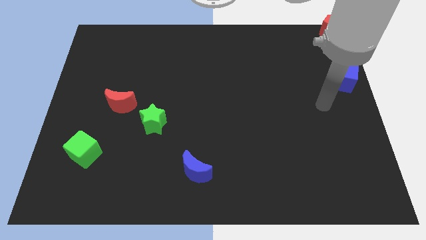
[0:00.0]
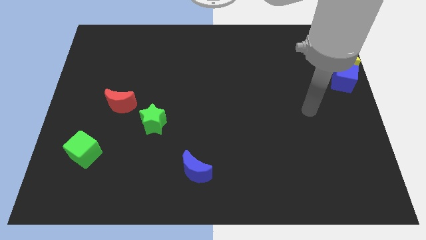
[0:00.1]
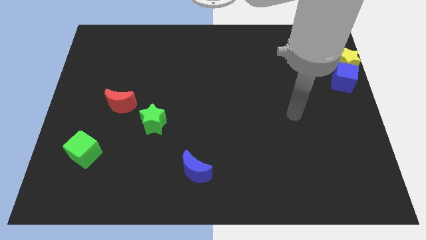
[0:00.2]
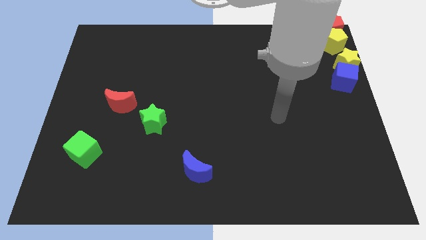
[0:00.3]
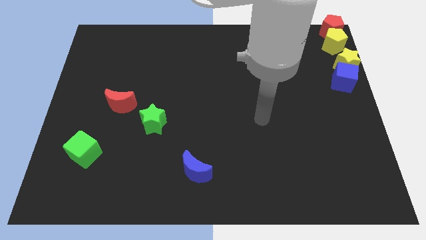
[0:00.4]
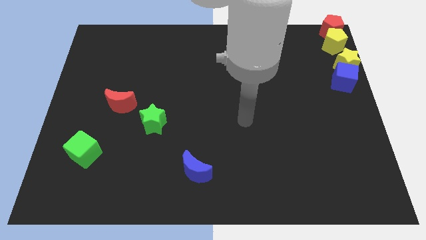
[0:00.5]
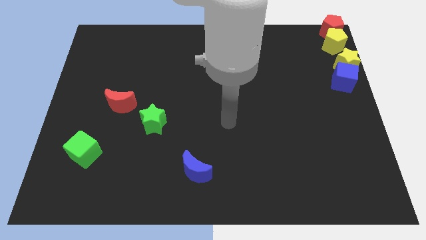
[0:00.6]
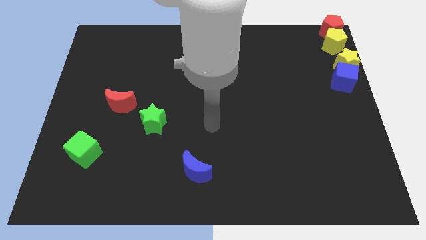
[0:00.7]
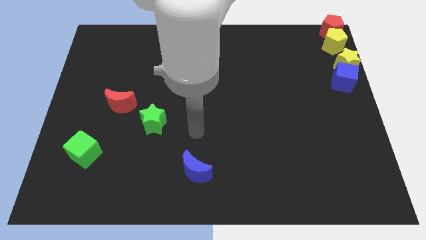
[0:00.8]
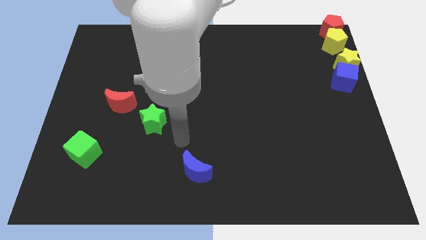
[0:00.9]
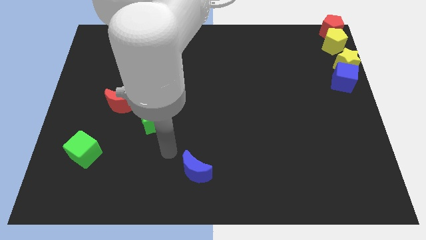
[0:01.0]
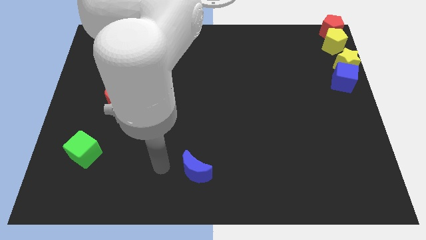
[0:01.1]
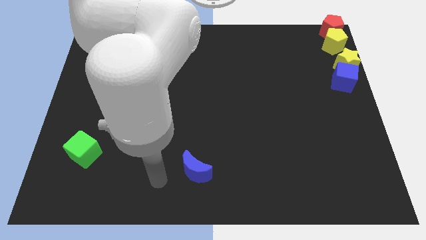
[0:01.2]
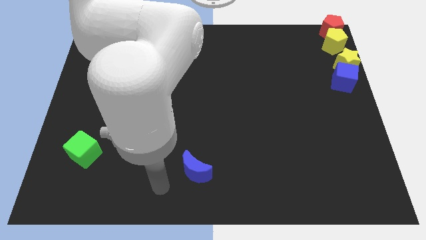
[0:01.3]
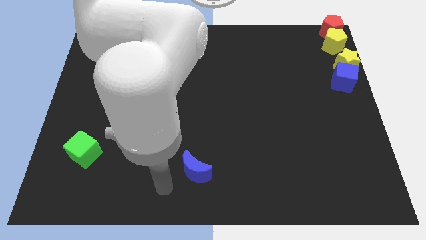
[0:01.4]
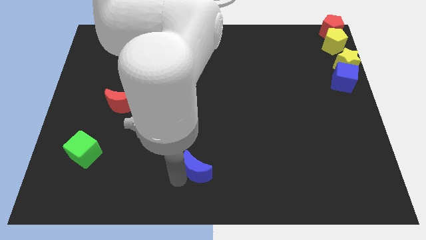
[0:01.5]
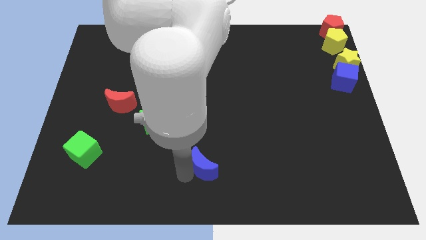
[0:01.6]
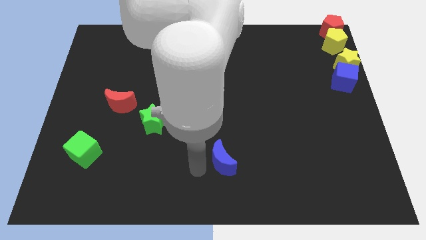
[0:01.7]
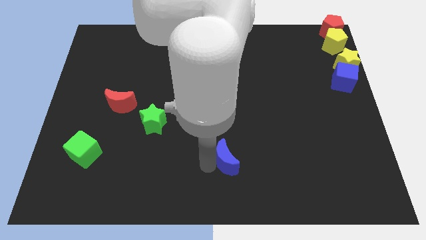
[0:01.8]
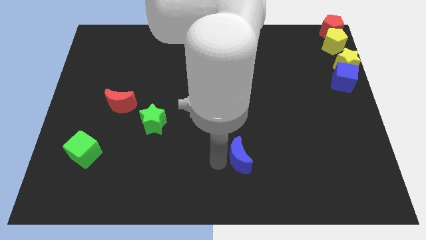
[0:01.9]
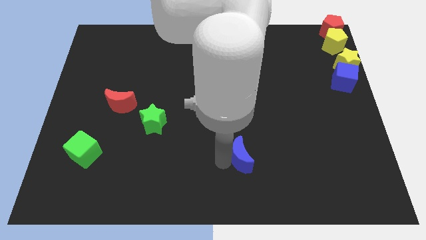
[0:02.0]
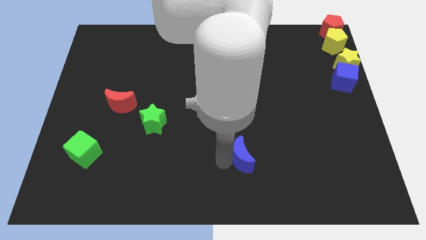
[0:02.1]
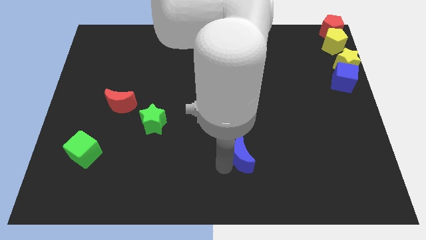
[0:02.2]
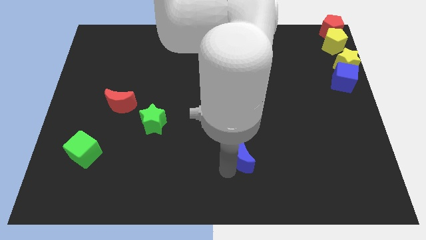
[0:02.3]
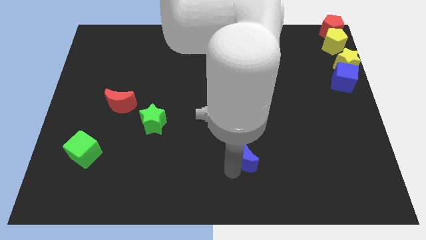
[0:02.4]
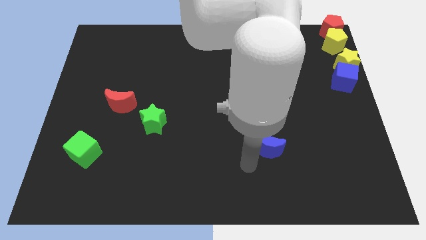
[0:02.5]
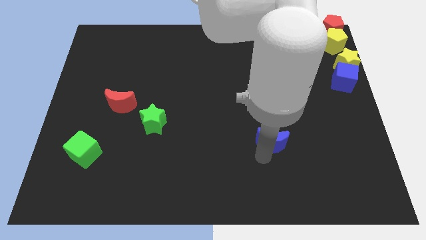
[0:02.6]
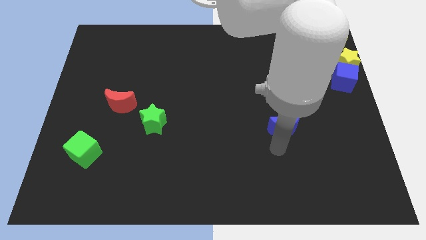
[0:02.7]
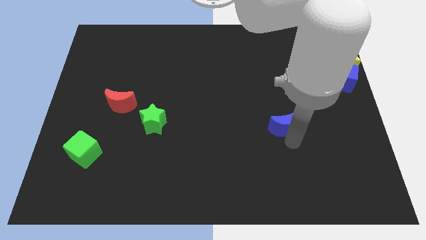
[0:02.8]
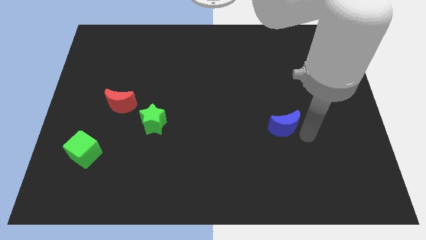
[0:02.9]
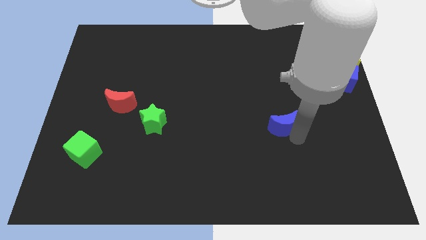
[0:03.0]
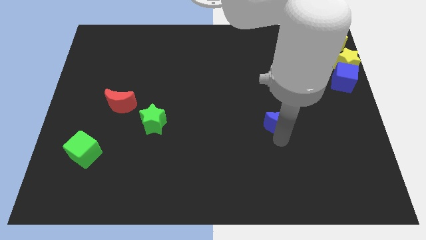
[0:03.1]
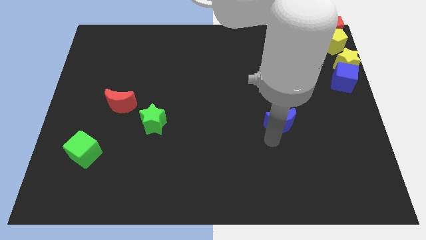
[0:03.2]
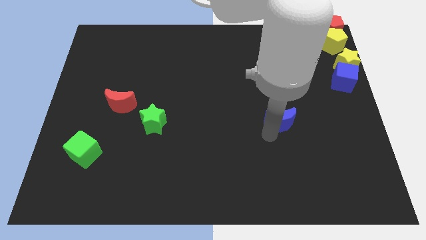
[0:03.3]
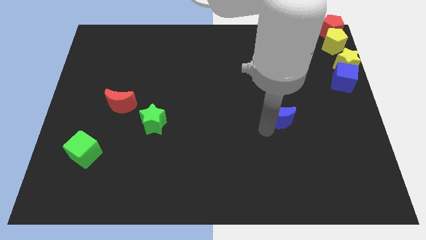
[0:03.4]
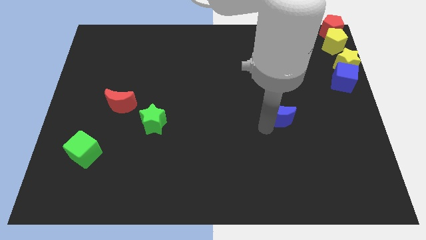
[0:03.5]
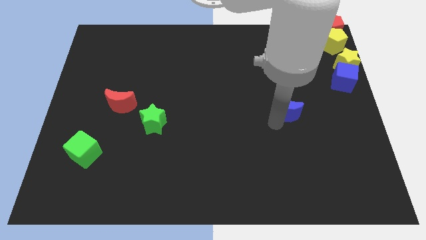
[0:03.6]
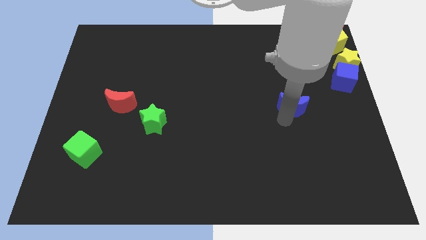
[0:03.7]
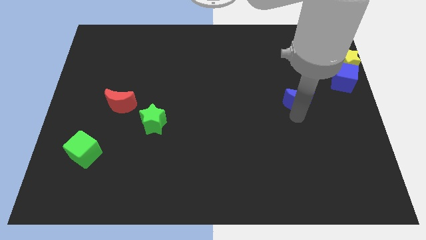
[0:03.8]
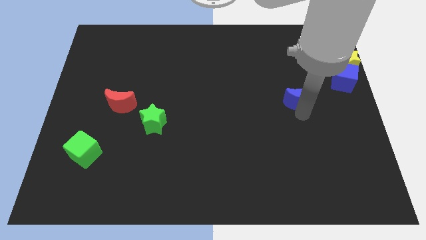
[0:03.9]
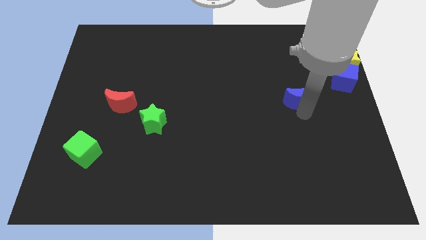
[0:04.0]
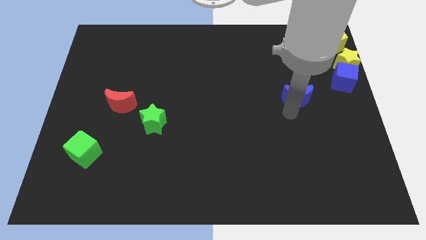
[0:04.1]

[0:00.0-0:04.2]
move the blue crescent towards blue cube

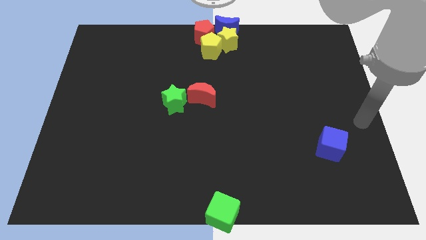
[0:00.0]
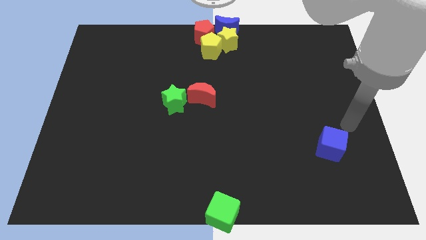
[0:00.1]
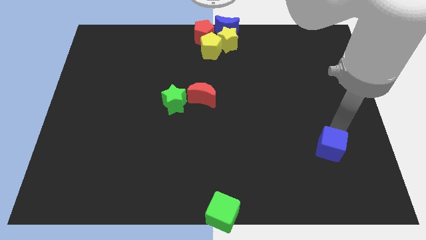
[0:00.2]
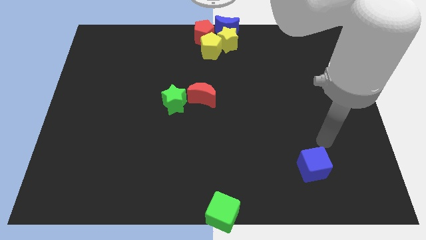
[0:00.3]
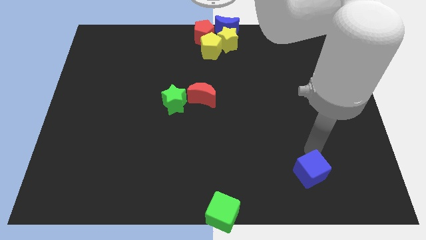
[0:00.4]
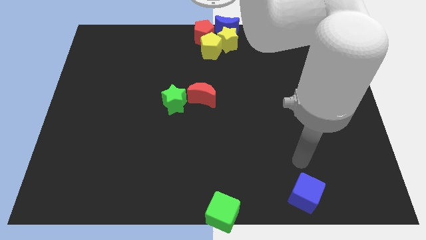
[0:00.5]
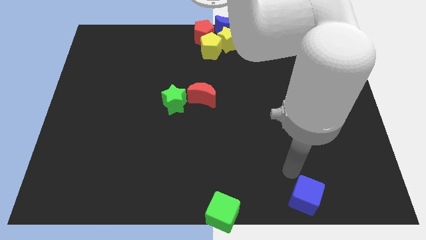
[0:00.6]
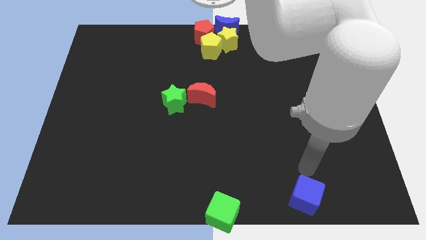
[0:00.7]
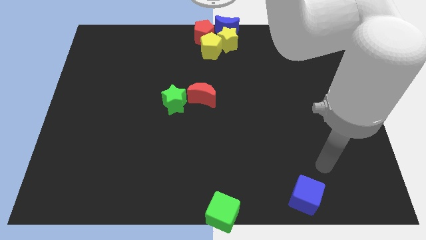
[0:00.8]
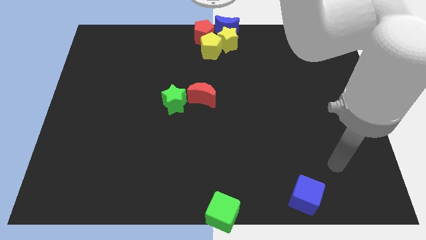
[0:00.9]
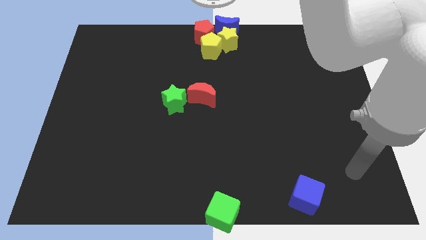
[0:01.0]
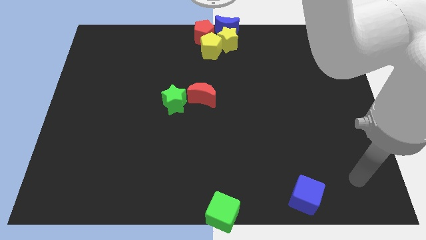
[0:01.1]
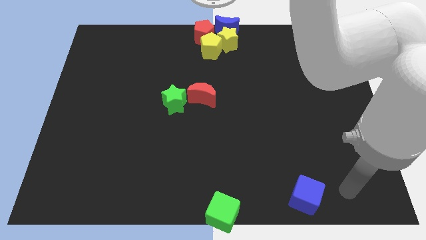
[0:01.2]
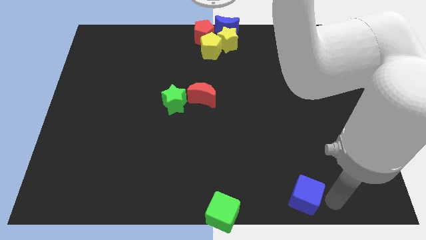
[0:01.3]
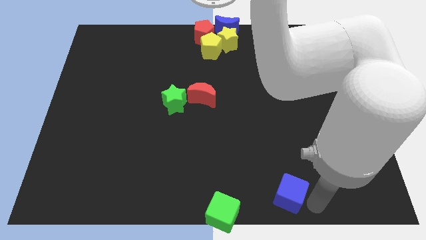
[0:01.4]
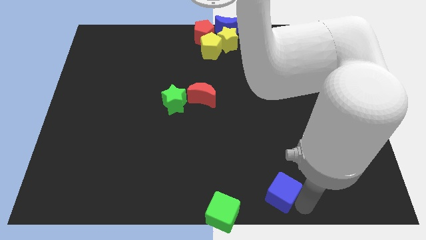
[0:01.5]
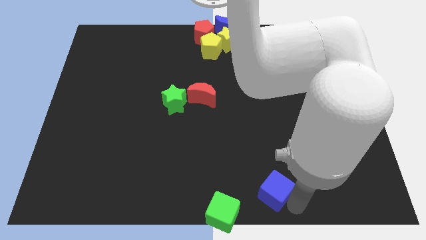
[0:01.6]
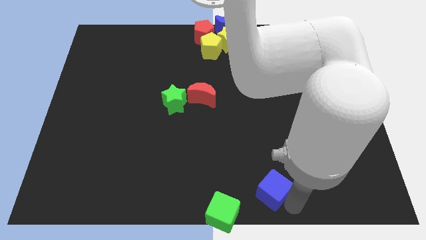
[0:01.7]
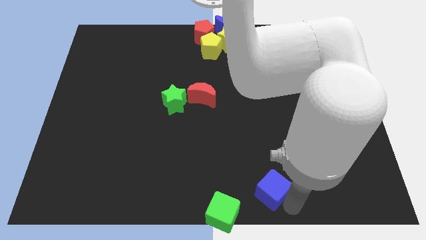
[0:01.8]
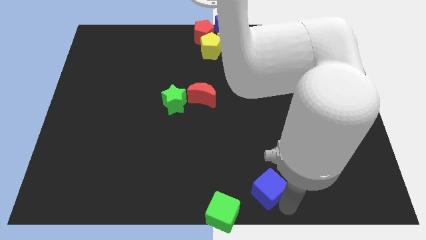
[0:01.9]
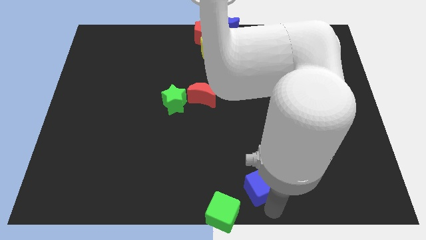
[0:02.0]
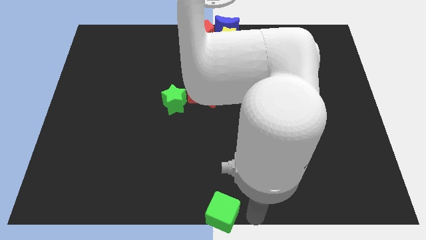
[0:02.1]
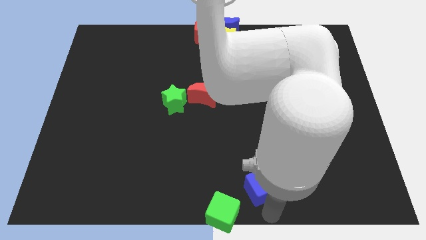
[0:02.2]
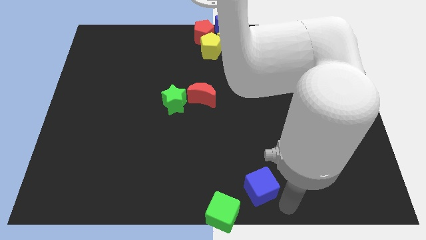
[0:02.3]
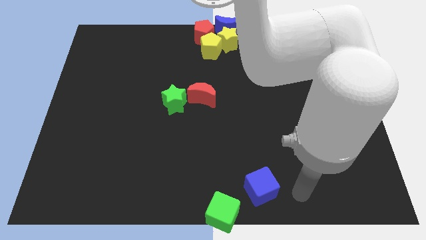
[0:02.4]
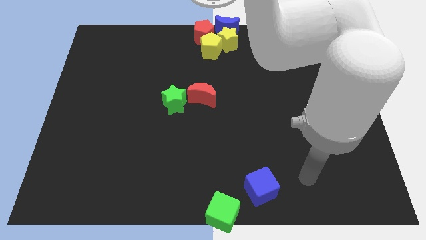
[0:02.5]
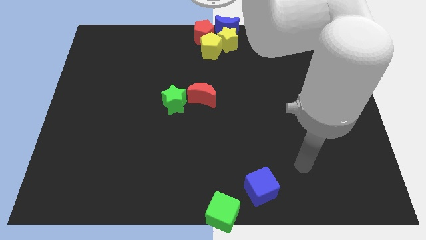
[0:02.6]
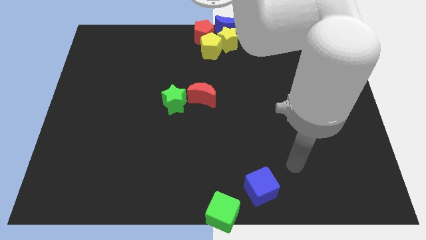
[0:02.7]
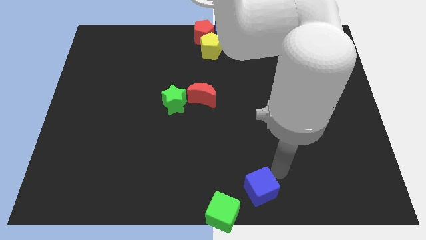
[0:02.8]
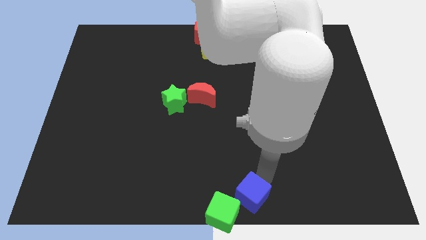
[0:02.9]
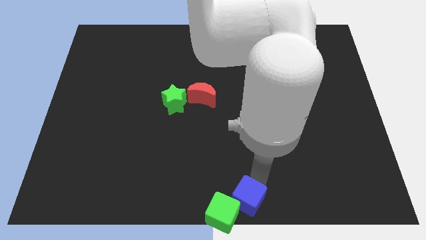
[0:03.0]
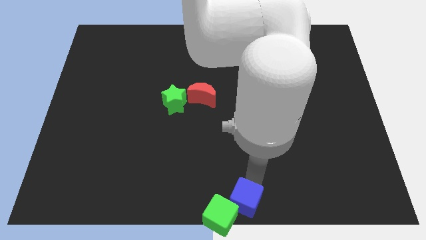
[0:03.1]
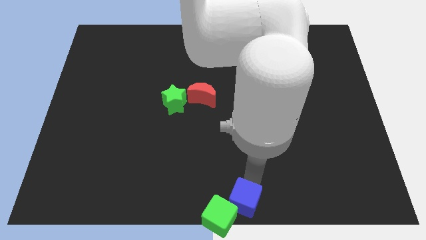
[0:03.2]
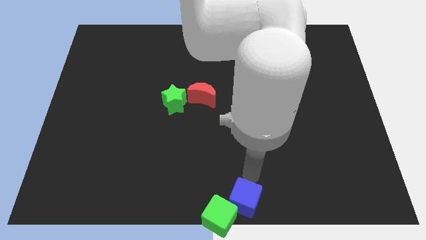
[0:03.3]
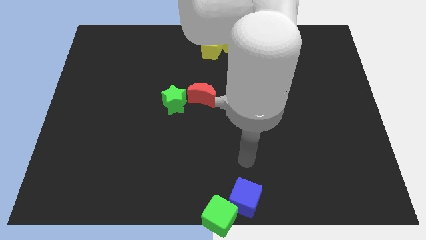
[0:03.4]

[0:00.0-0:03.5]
push the blue square into the green cube

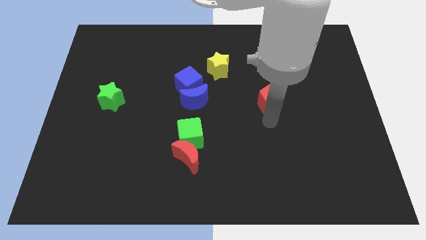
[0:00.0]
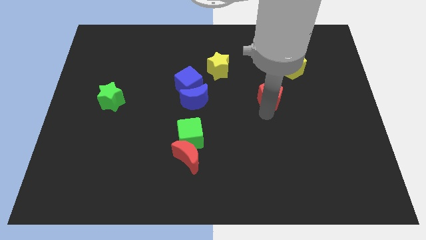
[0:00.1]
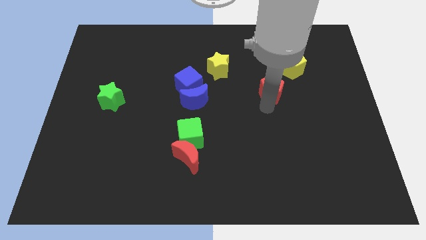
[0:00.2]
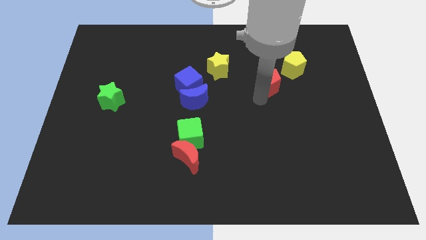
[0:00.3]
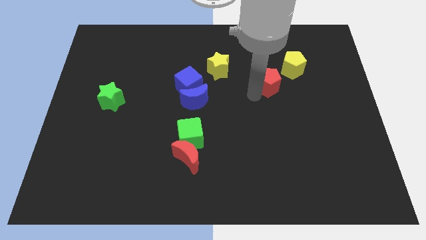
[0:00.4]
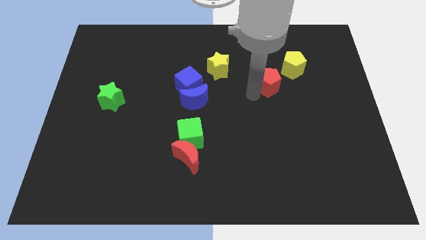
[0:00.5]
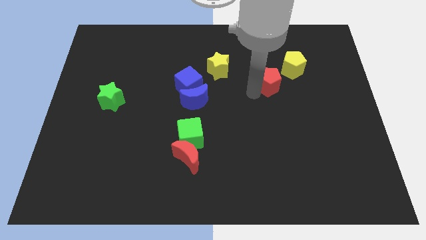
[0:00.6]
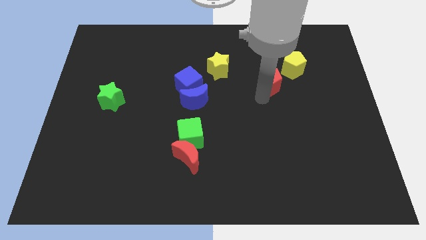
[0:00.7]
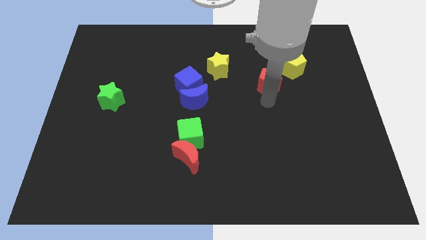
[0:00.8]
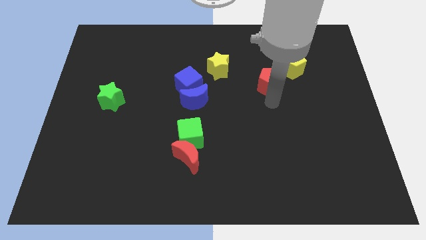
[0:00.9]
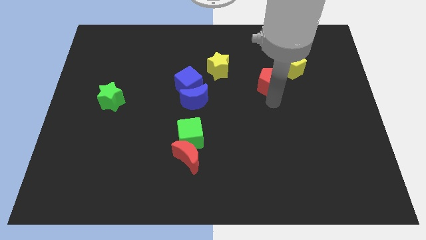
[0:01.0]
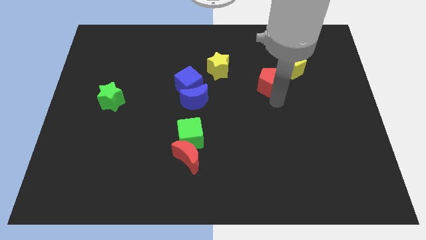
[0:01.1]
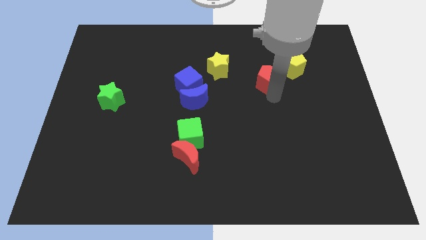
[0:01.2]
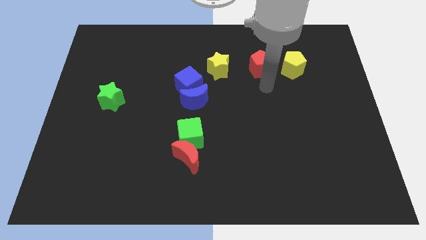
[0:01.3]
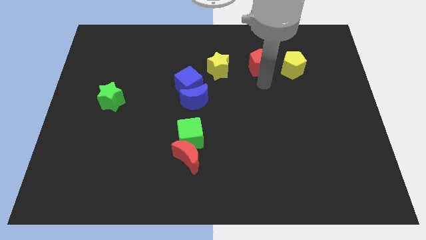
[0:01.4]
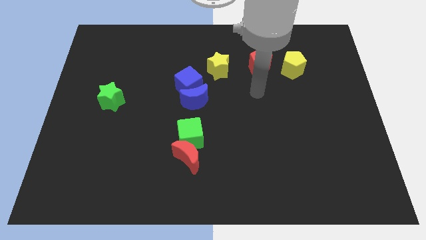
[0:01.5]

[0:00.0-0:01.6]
place the red pentagon in between the yellow pentagon and yellow star
